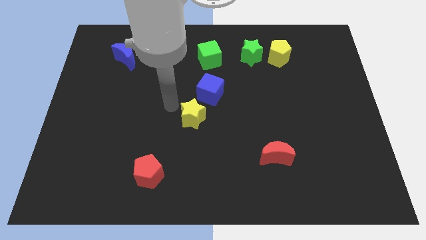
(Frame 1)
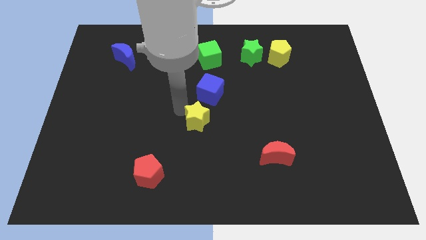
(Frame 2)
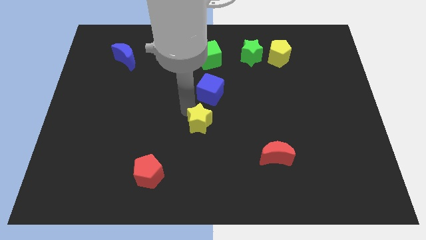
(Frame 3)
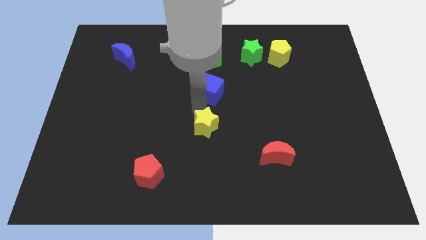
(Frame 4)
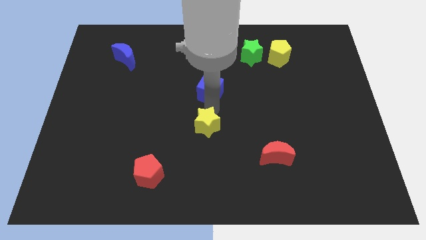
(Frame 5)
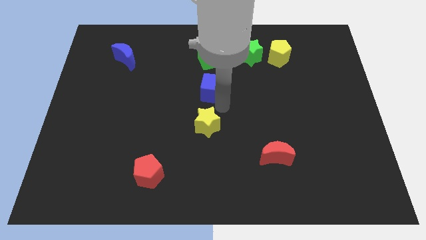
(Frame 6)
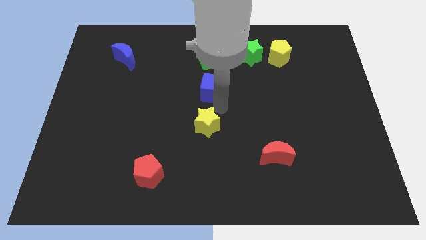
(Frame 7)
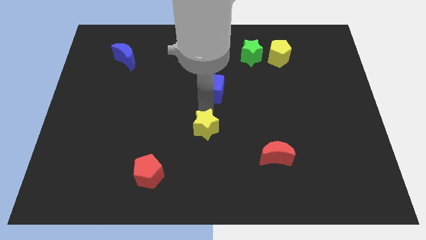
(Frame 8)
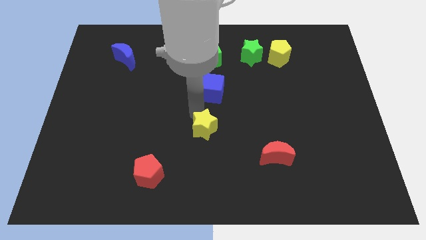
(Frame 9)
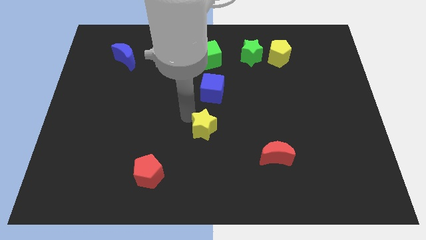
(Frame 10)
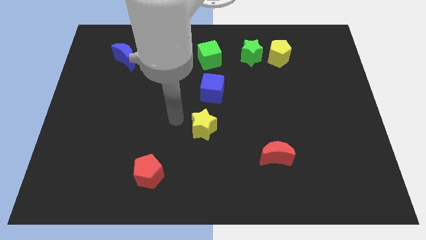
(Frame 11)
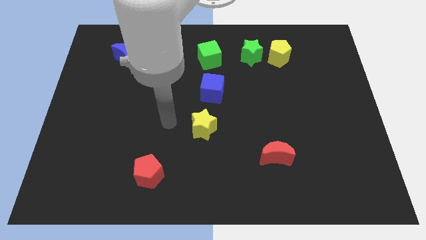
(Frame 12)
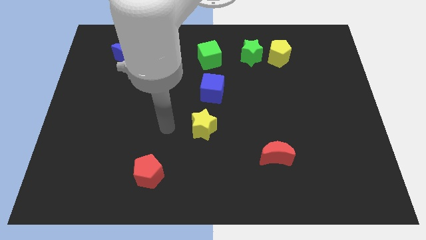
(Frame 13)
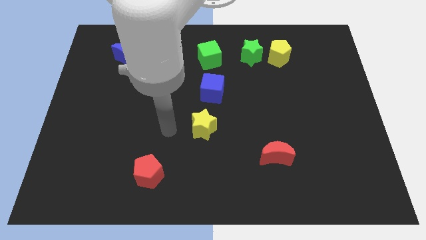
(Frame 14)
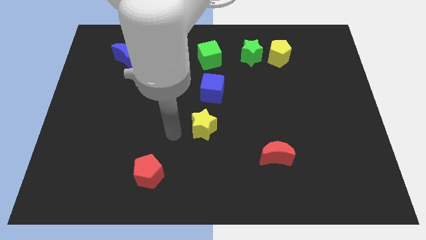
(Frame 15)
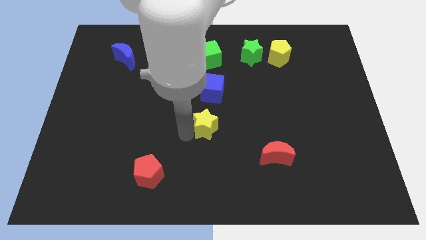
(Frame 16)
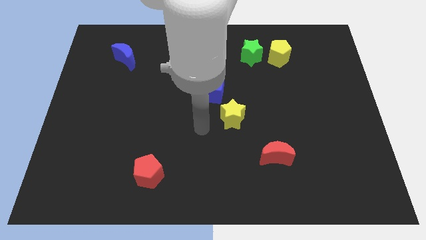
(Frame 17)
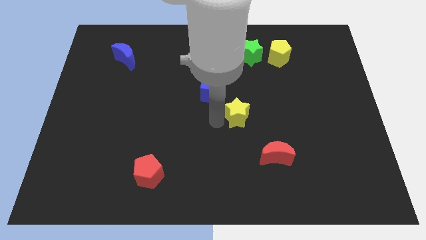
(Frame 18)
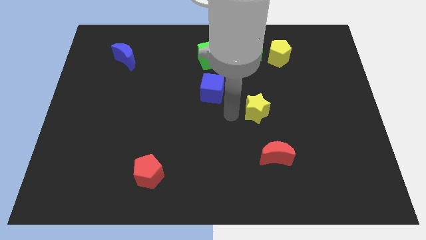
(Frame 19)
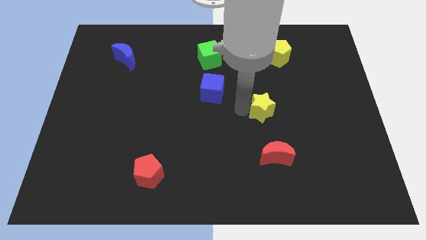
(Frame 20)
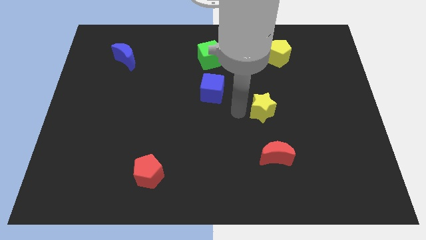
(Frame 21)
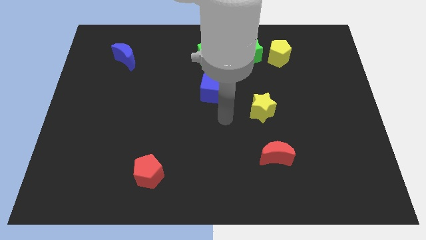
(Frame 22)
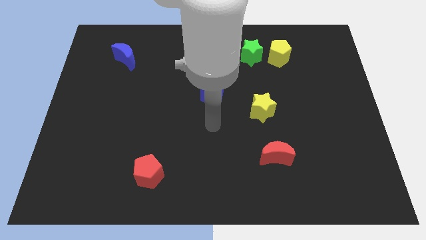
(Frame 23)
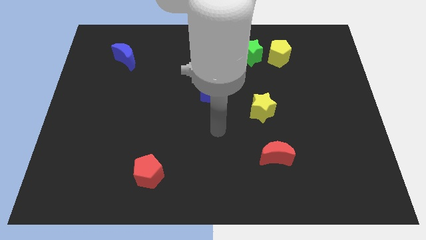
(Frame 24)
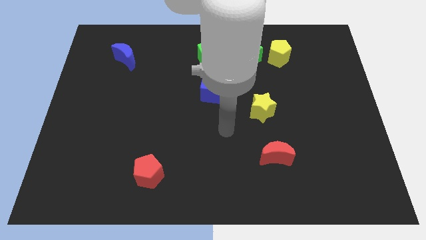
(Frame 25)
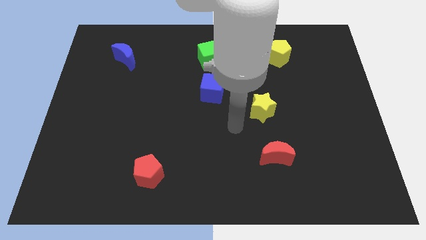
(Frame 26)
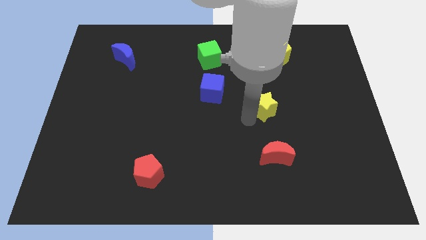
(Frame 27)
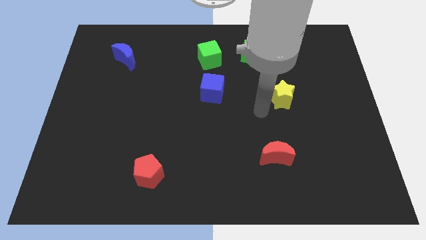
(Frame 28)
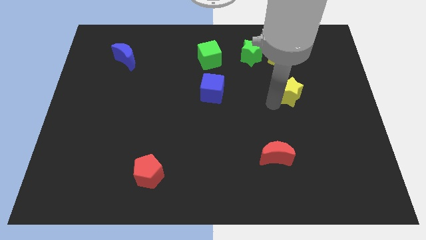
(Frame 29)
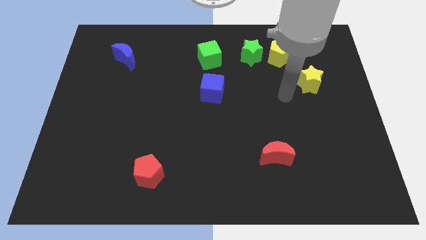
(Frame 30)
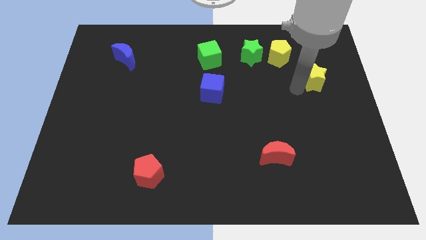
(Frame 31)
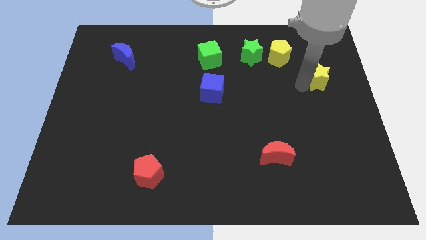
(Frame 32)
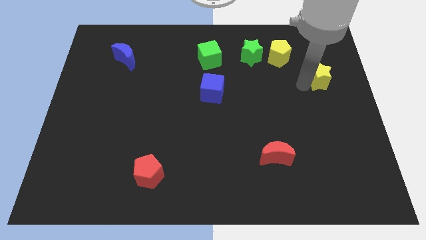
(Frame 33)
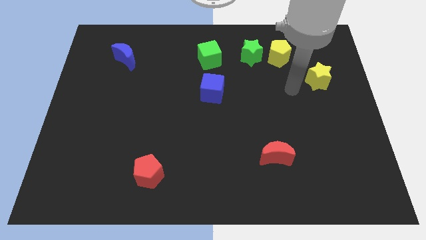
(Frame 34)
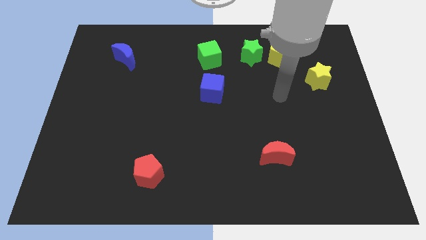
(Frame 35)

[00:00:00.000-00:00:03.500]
push the yellow star towards top right corner of the board

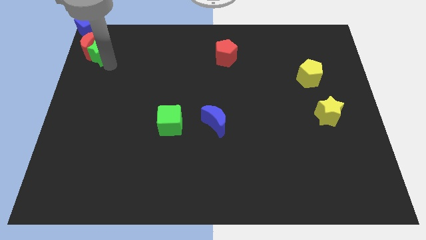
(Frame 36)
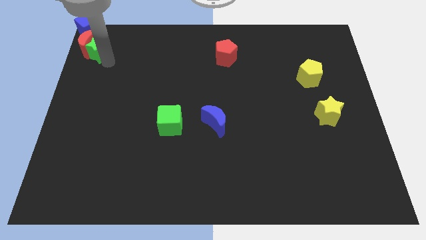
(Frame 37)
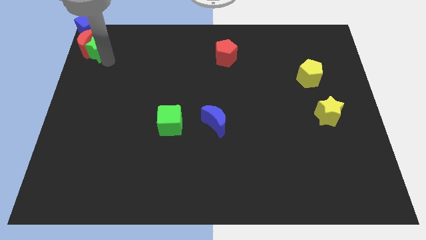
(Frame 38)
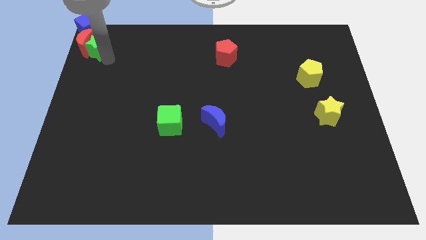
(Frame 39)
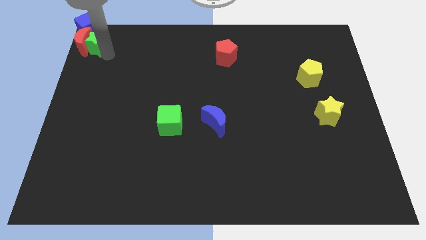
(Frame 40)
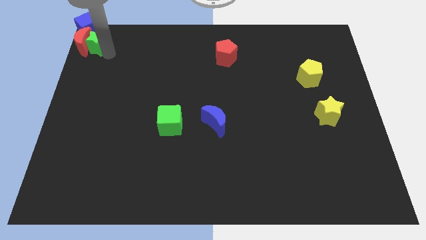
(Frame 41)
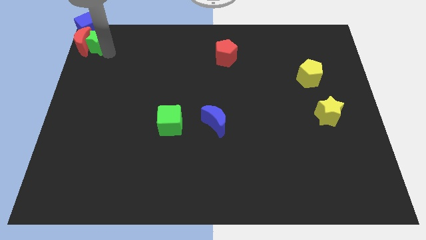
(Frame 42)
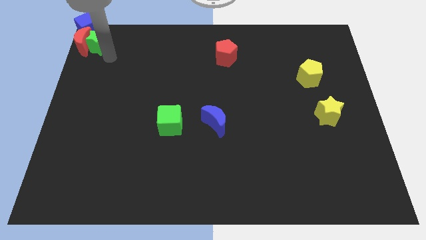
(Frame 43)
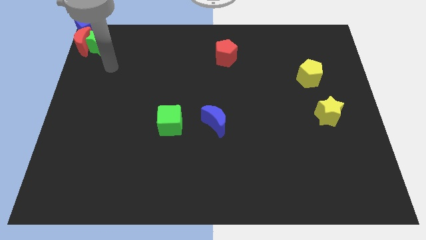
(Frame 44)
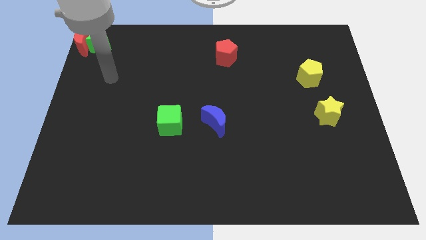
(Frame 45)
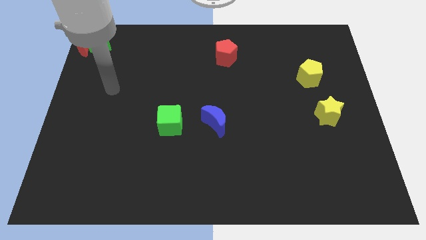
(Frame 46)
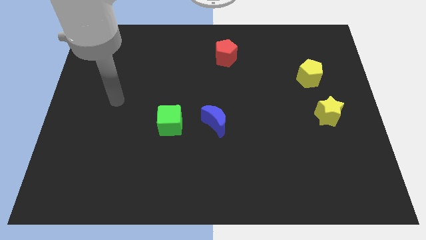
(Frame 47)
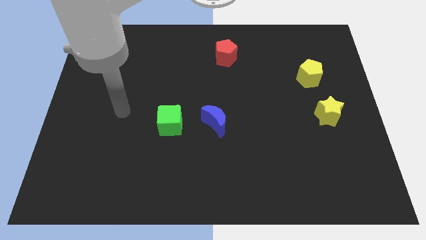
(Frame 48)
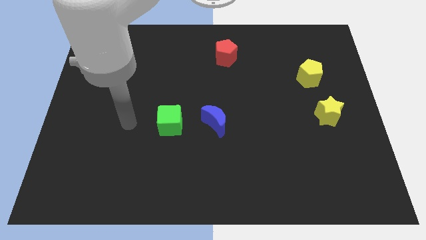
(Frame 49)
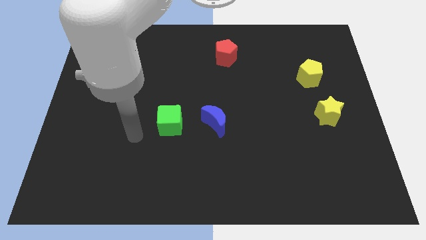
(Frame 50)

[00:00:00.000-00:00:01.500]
move the green star and the red moon to the top left

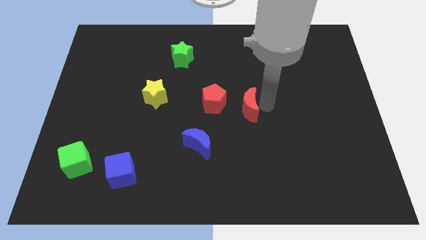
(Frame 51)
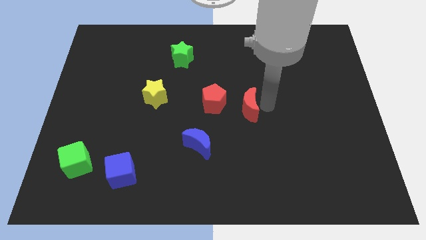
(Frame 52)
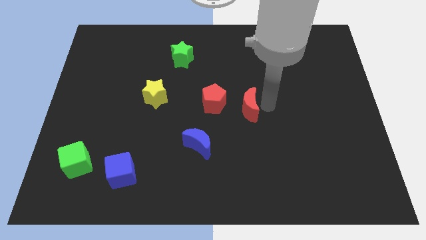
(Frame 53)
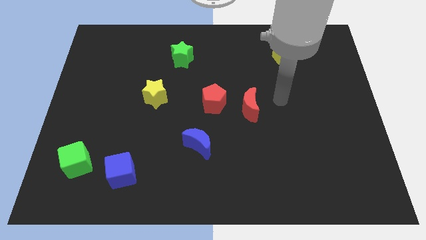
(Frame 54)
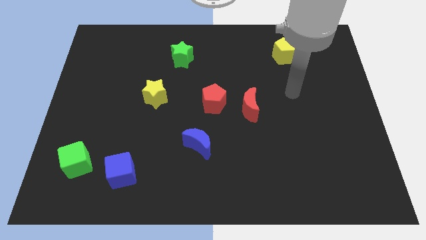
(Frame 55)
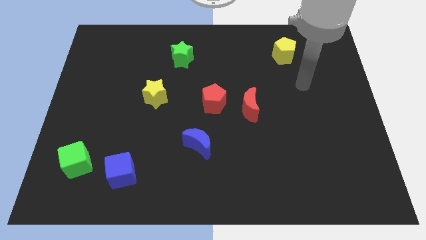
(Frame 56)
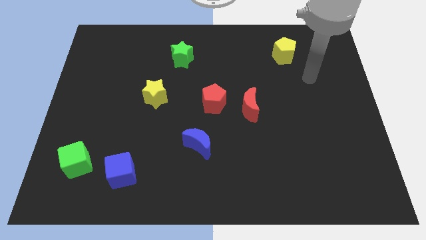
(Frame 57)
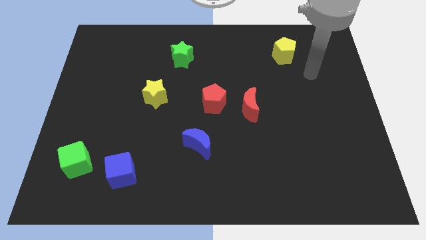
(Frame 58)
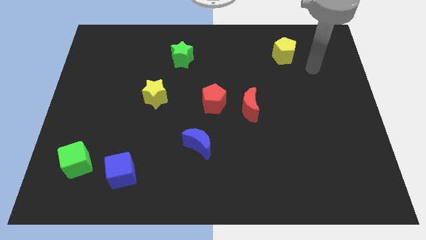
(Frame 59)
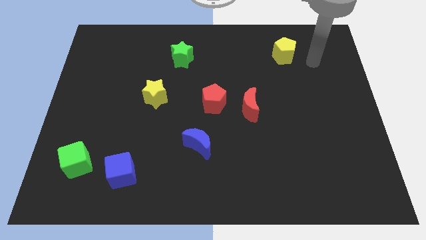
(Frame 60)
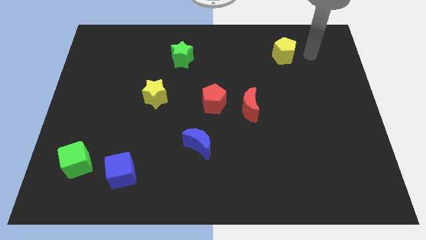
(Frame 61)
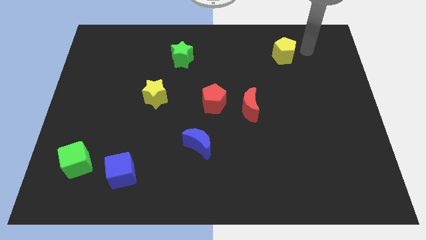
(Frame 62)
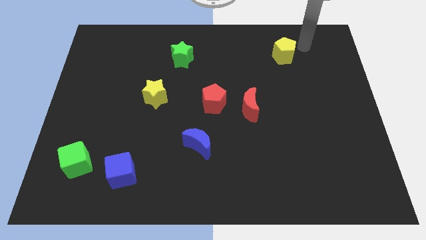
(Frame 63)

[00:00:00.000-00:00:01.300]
point your arm at the right of the yellow pentagon

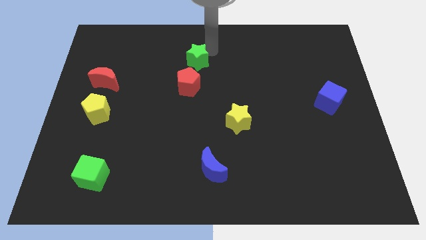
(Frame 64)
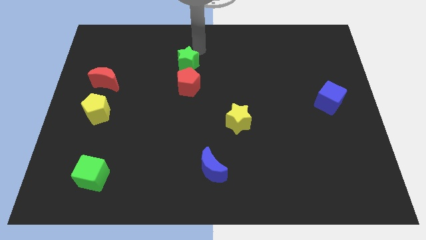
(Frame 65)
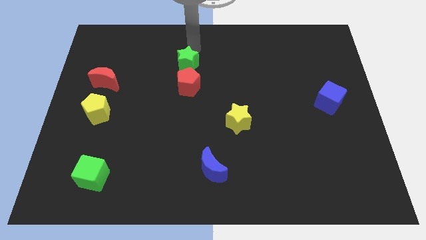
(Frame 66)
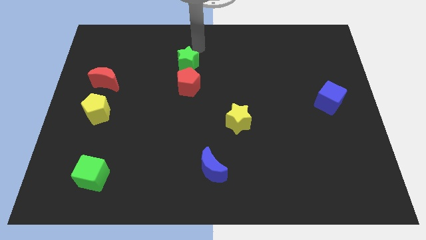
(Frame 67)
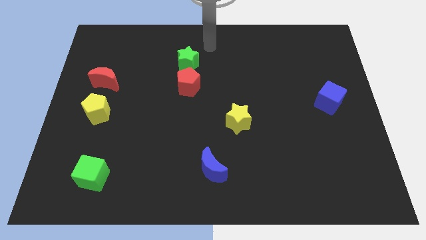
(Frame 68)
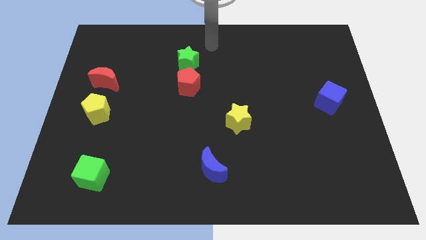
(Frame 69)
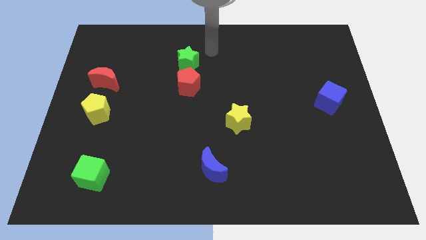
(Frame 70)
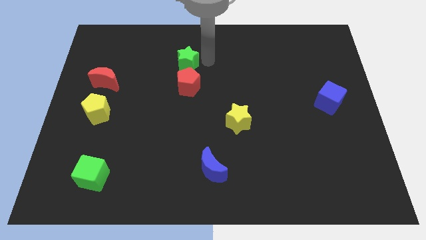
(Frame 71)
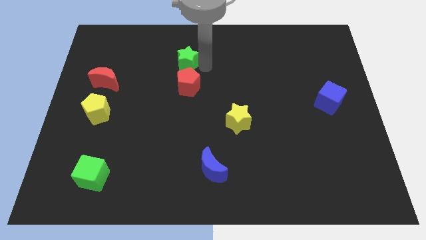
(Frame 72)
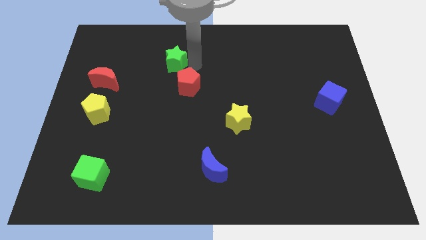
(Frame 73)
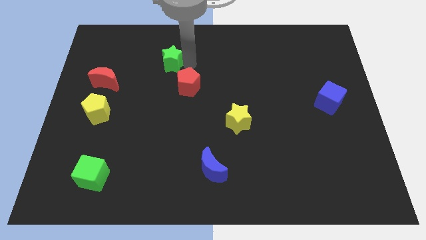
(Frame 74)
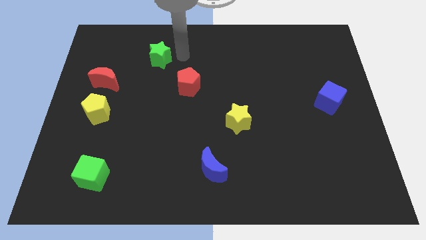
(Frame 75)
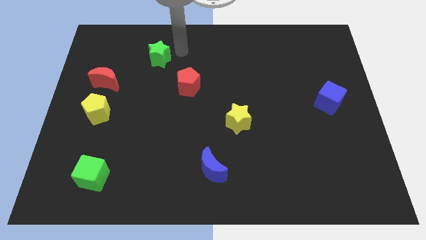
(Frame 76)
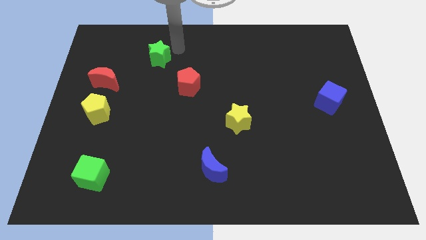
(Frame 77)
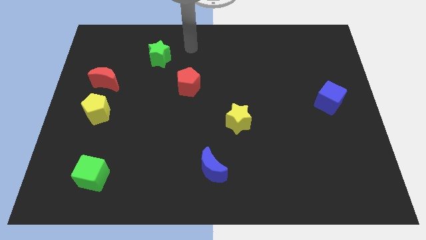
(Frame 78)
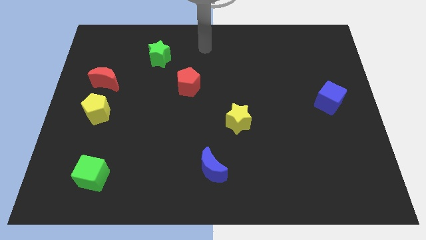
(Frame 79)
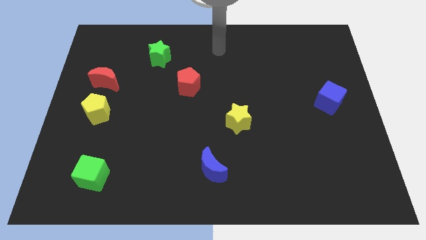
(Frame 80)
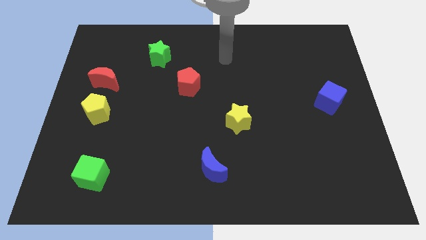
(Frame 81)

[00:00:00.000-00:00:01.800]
move green star to the top left of the red pentagon

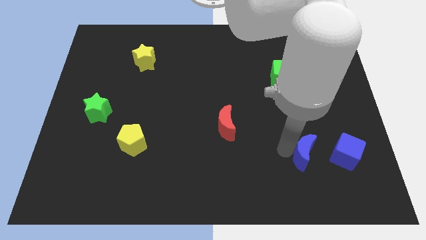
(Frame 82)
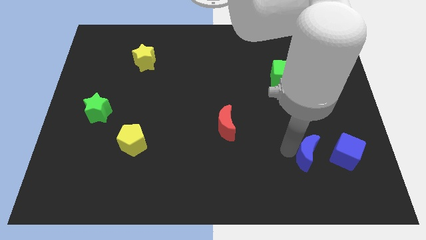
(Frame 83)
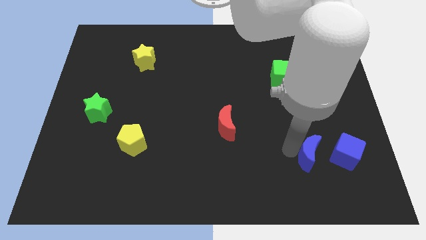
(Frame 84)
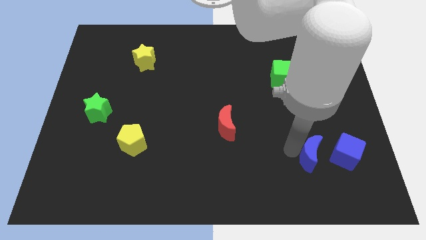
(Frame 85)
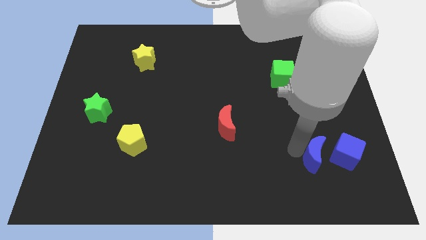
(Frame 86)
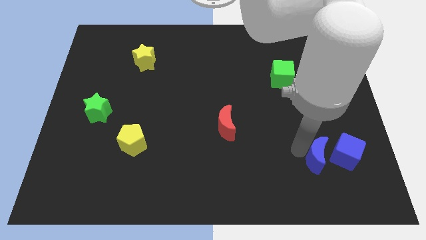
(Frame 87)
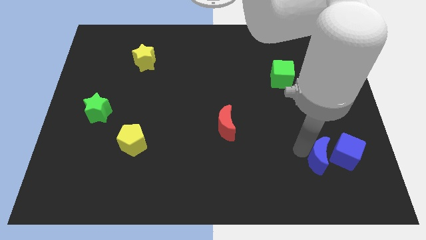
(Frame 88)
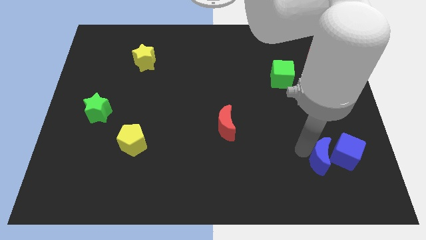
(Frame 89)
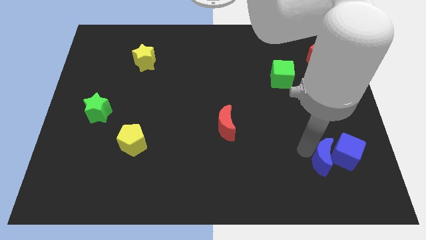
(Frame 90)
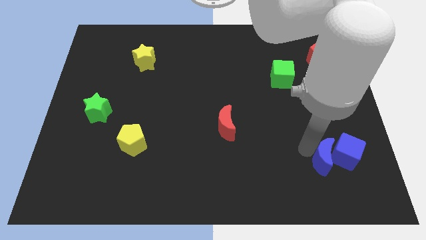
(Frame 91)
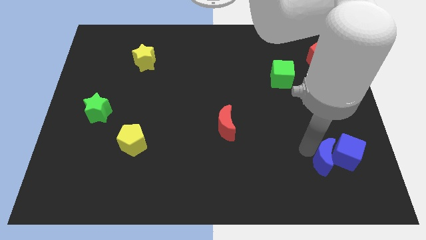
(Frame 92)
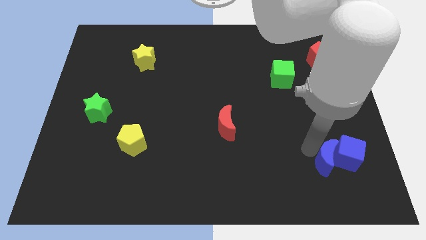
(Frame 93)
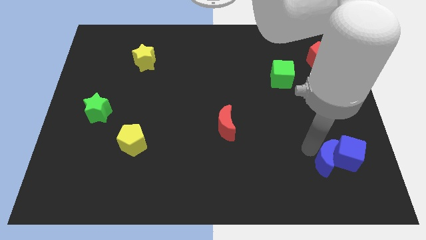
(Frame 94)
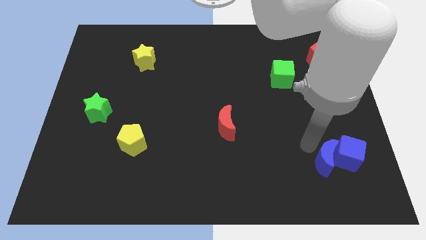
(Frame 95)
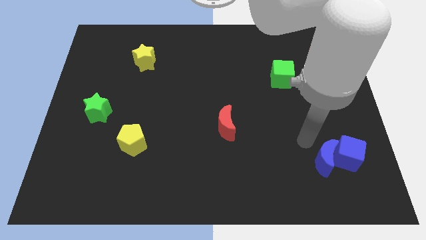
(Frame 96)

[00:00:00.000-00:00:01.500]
group up the two blue blocks
